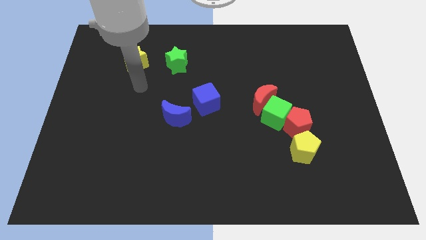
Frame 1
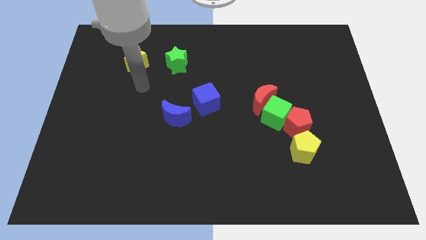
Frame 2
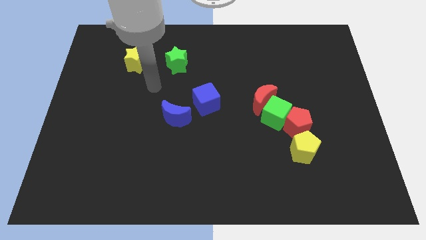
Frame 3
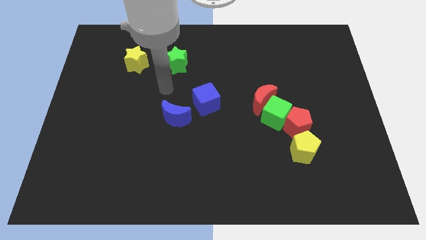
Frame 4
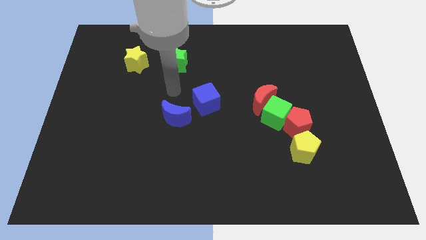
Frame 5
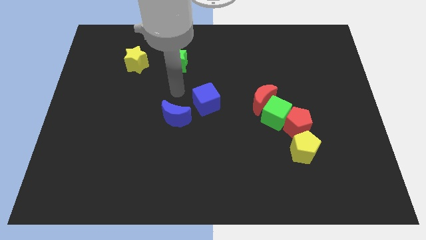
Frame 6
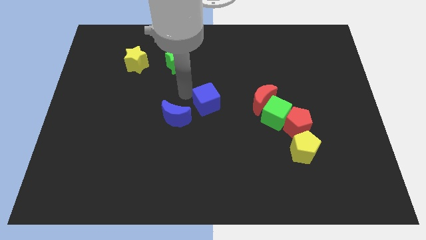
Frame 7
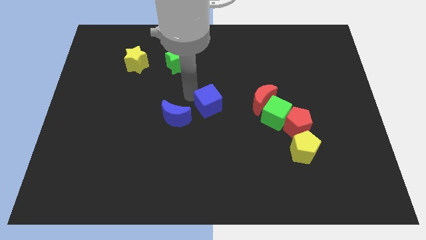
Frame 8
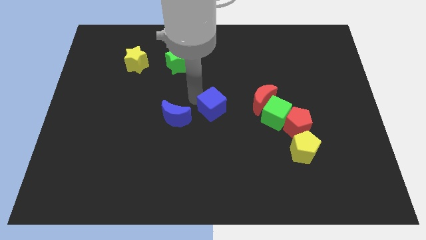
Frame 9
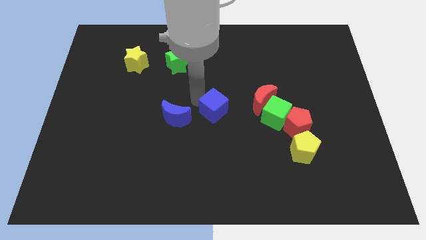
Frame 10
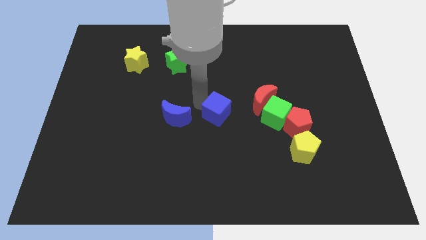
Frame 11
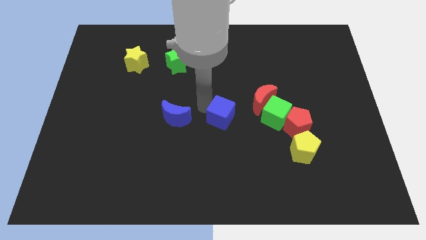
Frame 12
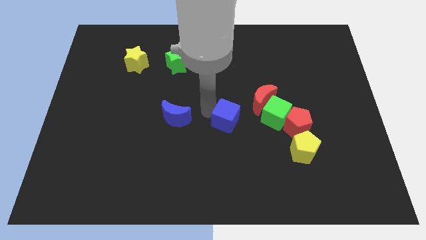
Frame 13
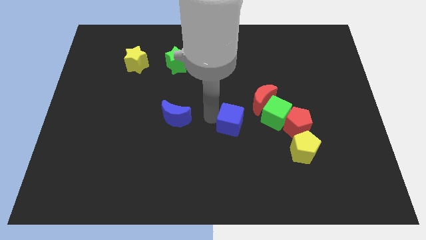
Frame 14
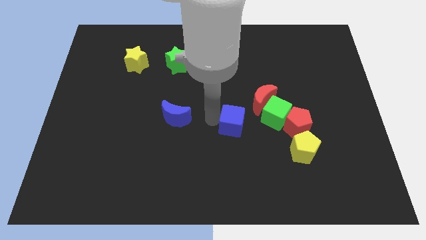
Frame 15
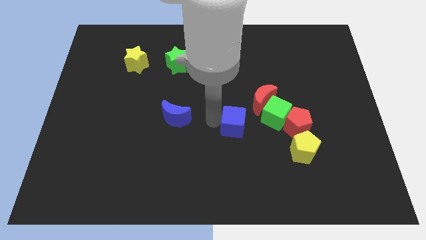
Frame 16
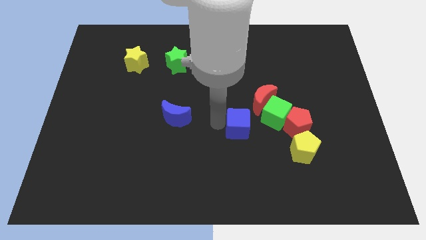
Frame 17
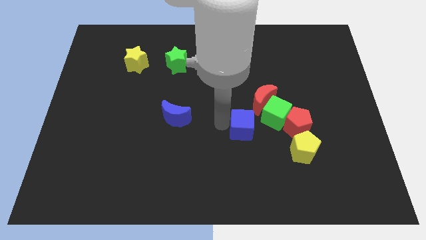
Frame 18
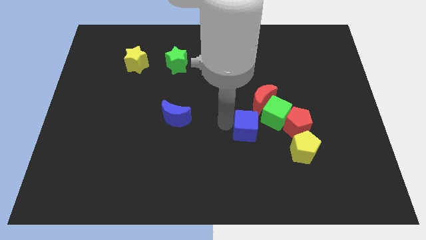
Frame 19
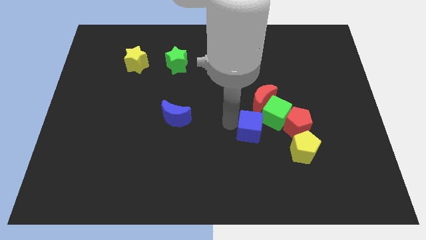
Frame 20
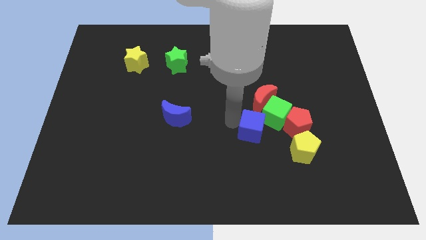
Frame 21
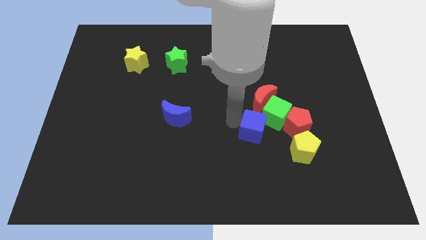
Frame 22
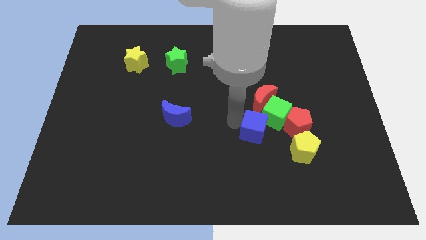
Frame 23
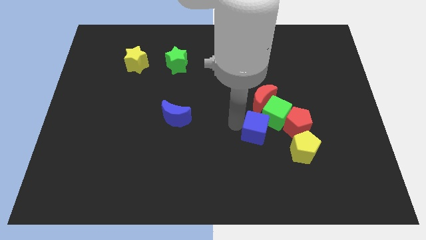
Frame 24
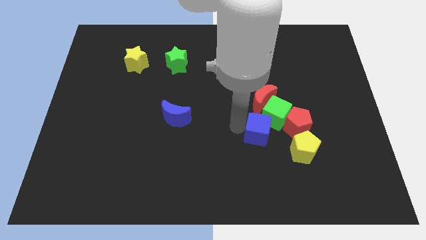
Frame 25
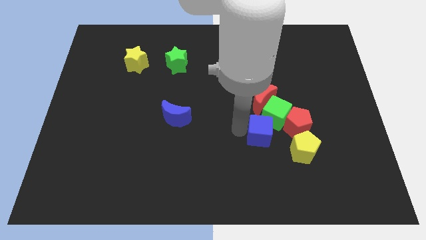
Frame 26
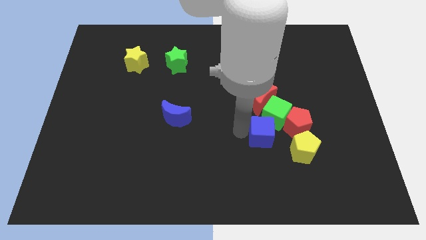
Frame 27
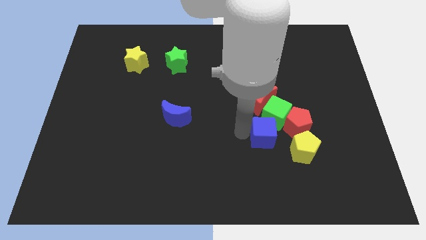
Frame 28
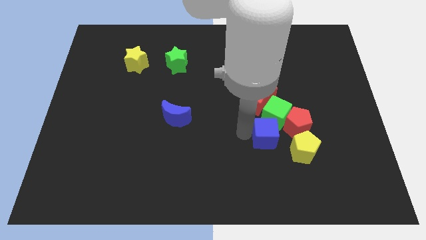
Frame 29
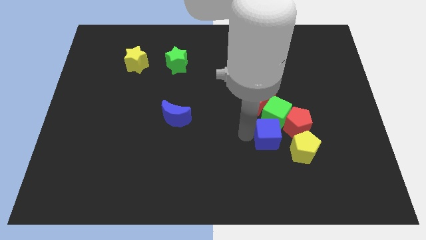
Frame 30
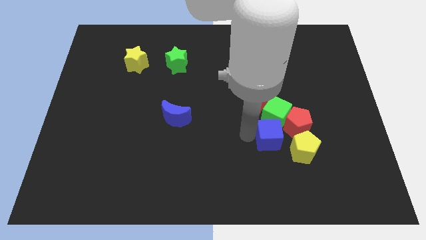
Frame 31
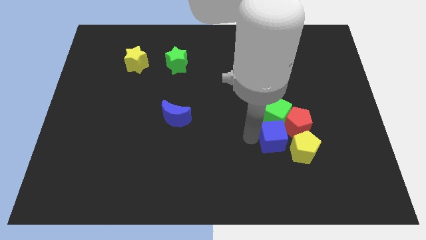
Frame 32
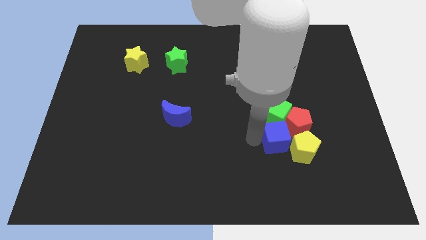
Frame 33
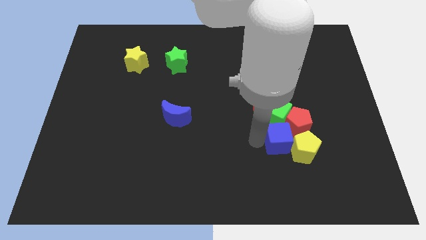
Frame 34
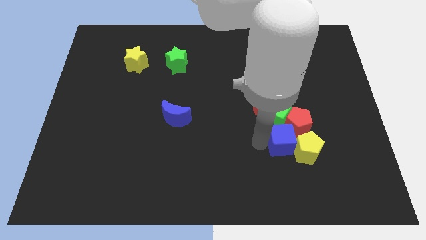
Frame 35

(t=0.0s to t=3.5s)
slide the blue cube next to the red pentagon

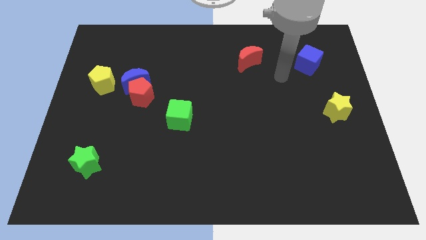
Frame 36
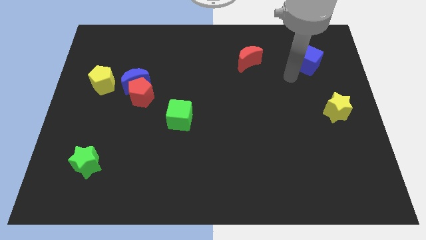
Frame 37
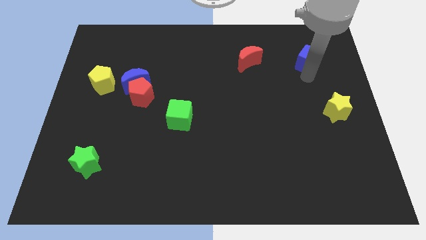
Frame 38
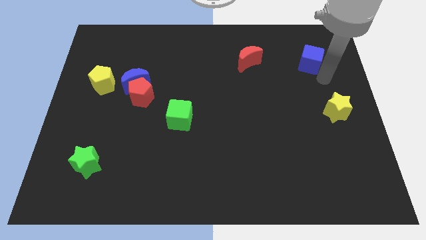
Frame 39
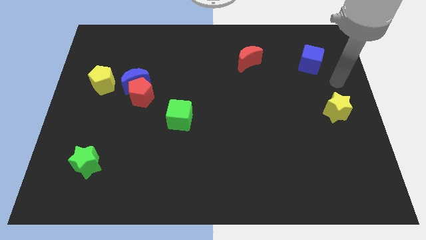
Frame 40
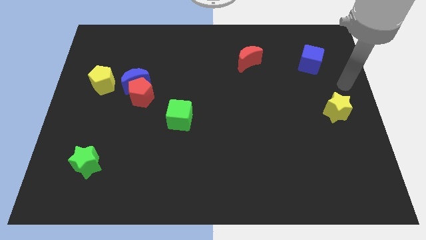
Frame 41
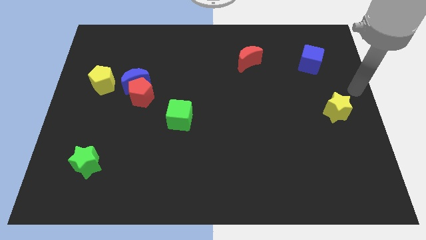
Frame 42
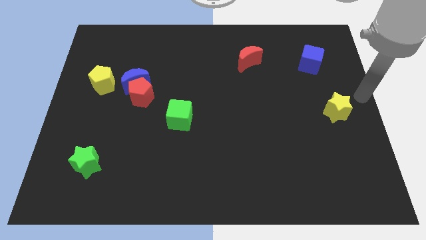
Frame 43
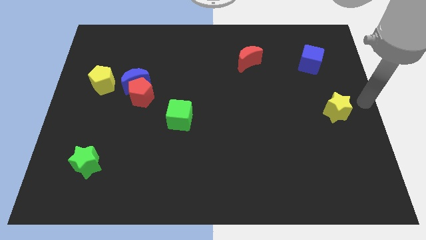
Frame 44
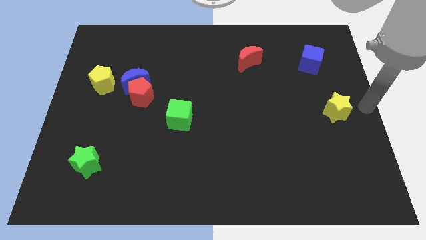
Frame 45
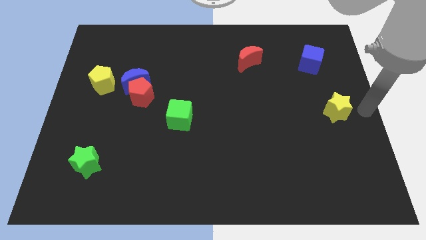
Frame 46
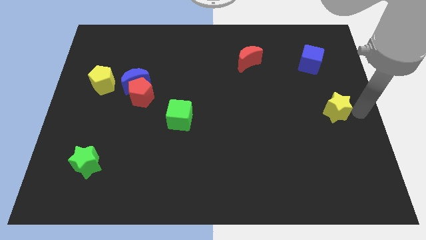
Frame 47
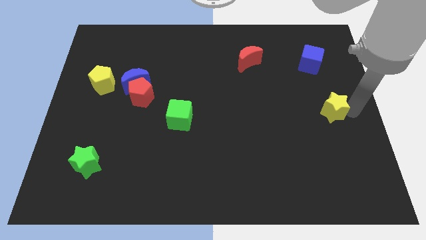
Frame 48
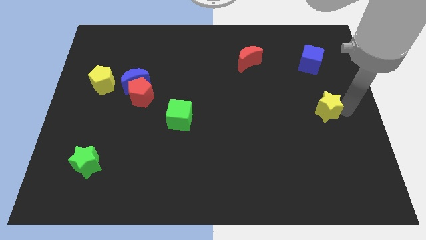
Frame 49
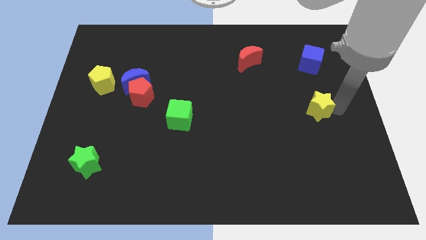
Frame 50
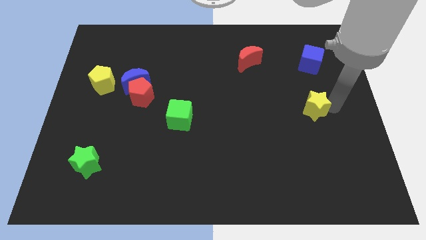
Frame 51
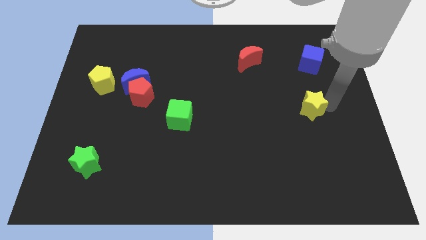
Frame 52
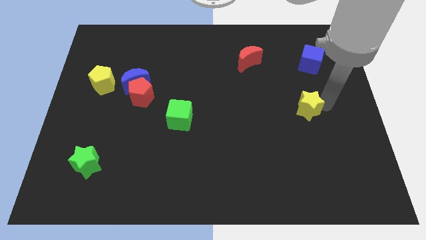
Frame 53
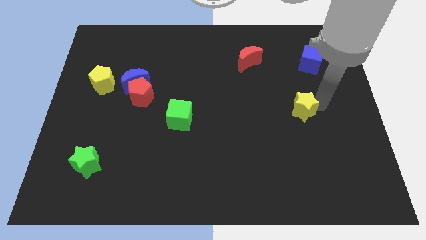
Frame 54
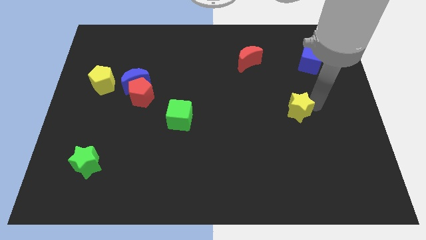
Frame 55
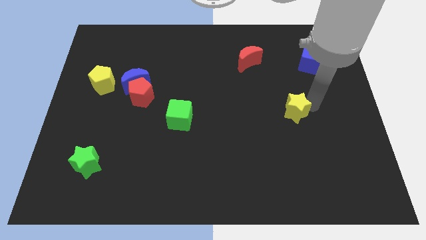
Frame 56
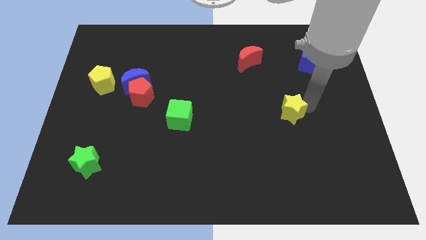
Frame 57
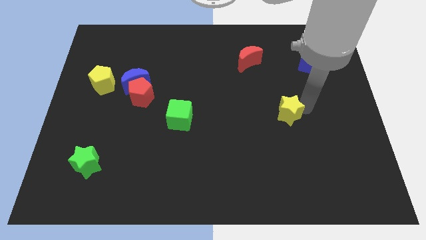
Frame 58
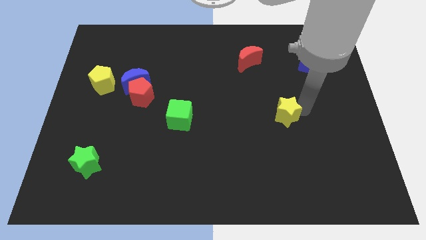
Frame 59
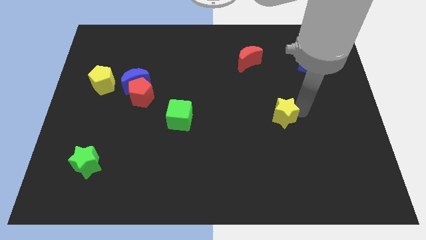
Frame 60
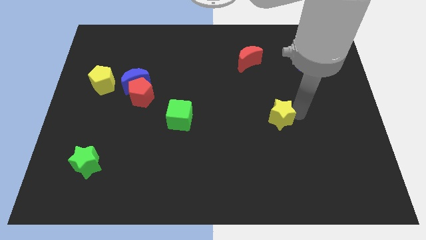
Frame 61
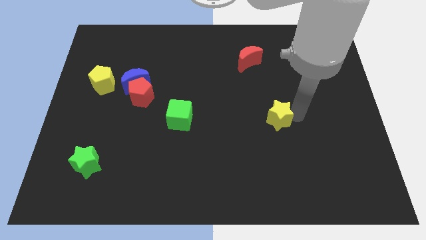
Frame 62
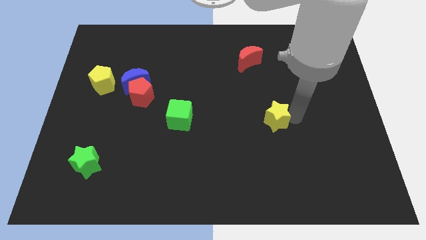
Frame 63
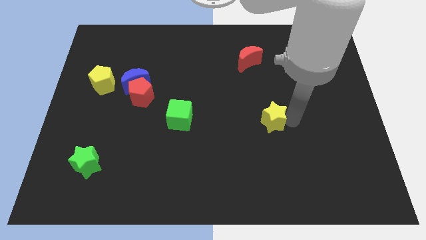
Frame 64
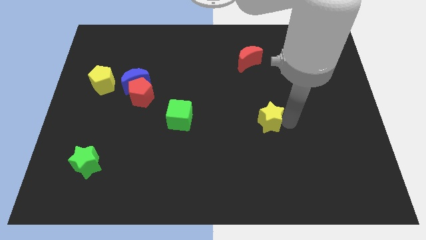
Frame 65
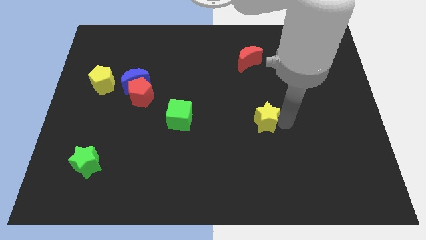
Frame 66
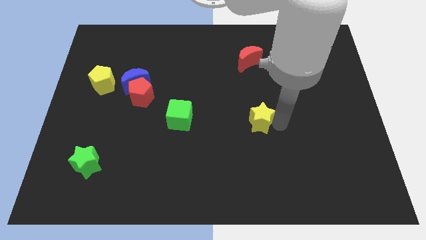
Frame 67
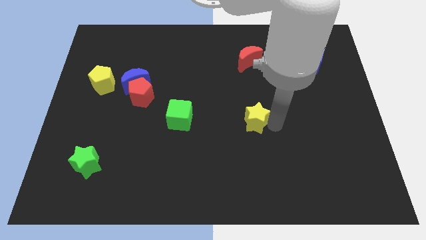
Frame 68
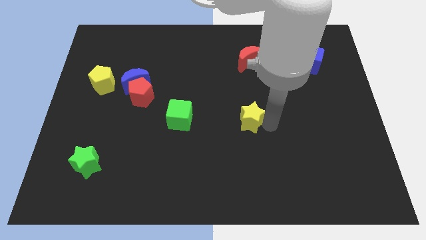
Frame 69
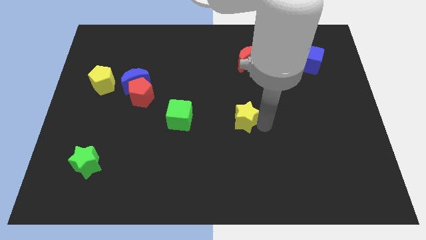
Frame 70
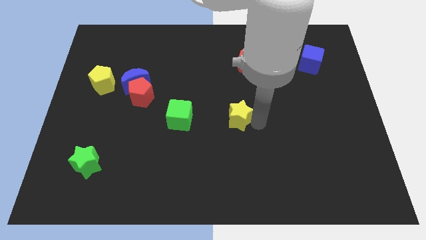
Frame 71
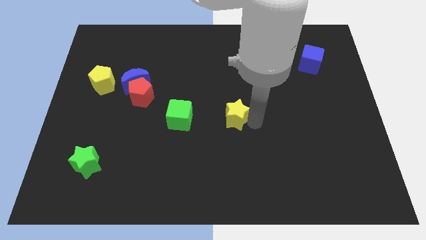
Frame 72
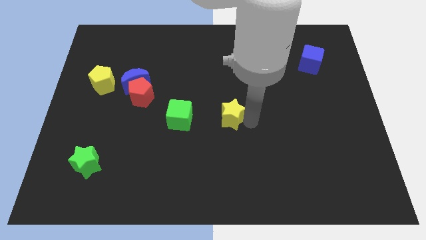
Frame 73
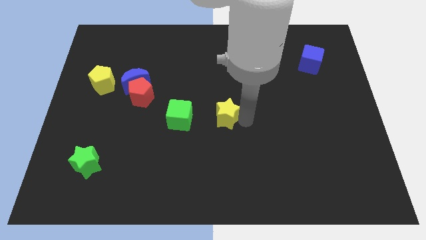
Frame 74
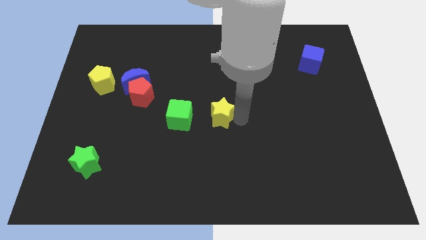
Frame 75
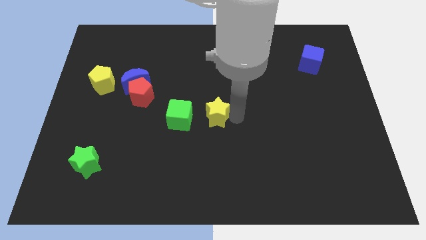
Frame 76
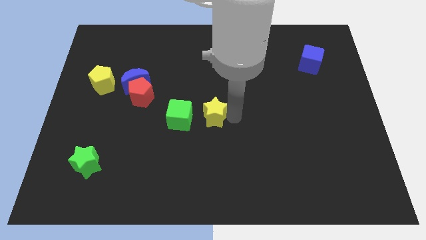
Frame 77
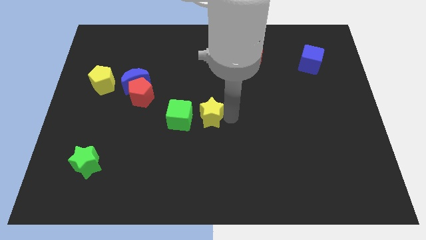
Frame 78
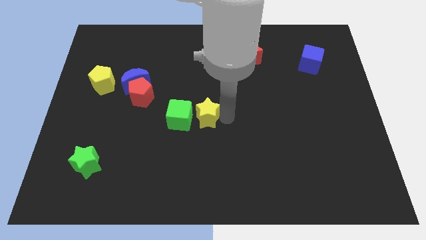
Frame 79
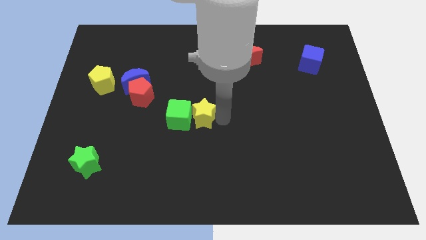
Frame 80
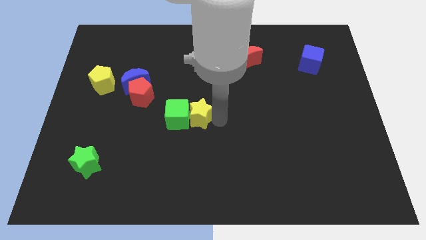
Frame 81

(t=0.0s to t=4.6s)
push the yellow star to the green cube

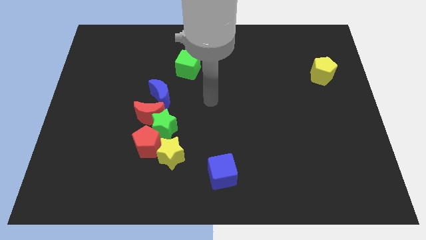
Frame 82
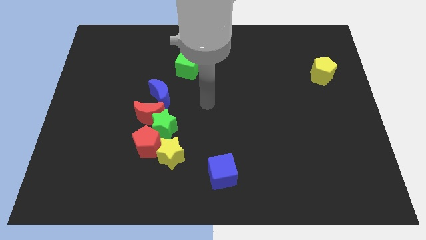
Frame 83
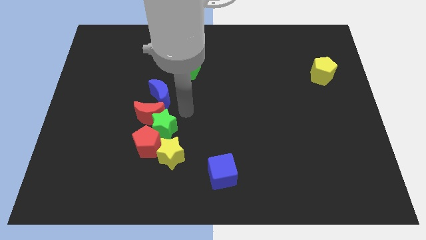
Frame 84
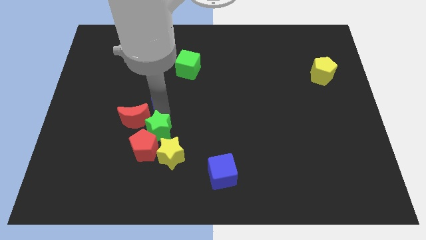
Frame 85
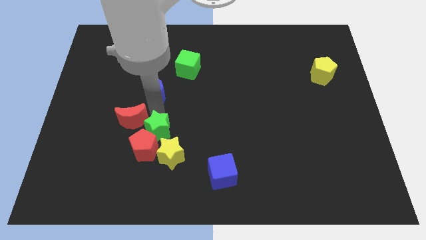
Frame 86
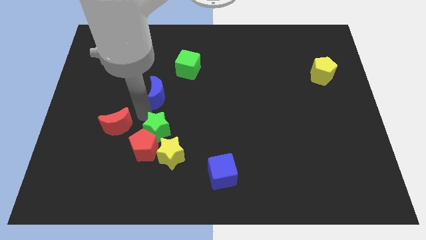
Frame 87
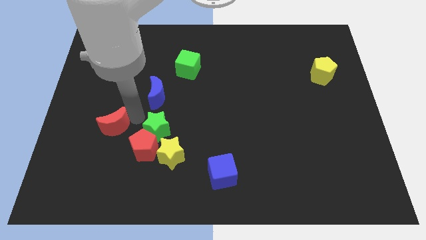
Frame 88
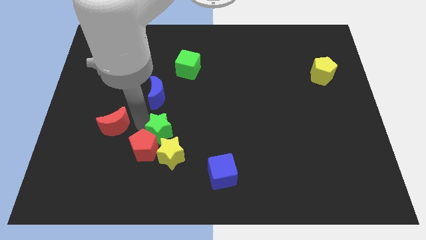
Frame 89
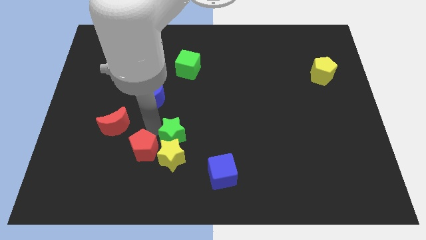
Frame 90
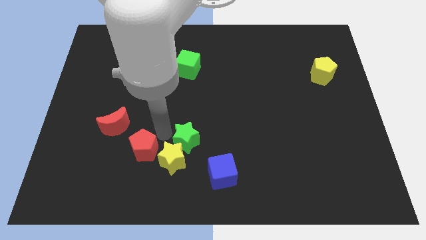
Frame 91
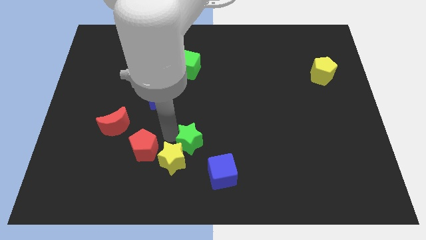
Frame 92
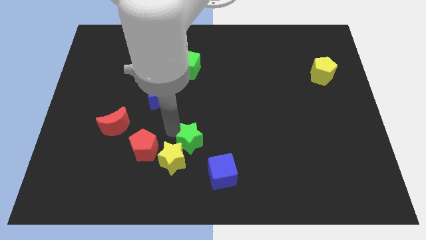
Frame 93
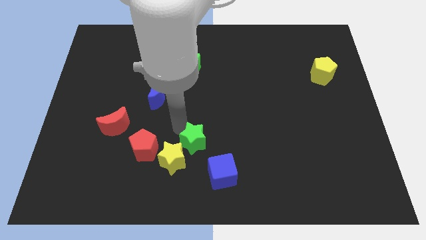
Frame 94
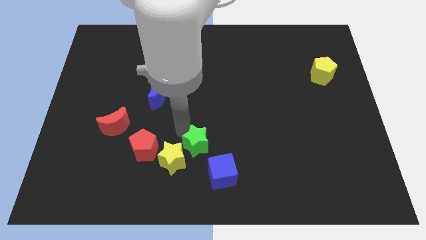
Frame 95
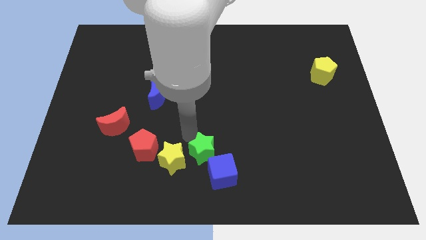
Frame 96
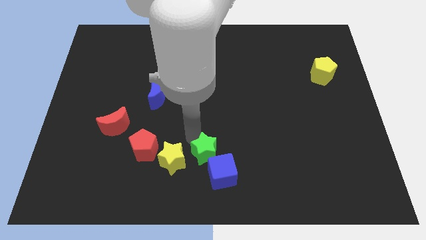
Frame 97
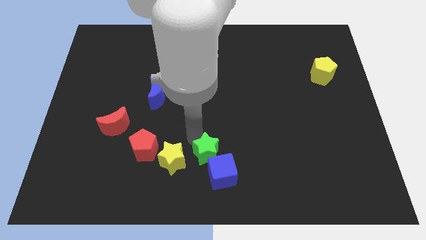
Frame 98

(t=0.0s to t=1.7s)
push the green star next to the blue cube
